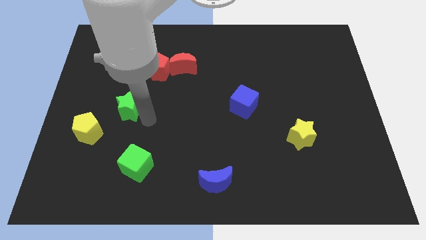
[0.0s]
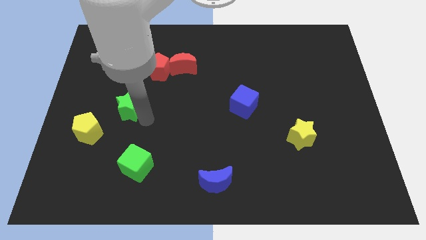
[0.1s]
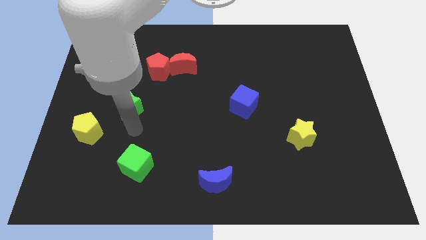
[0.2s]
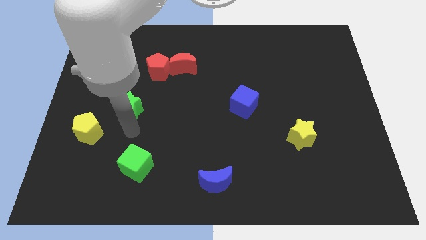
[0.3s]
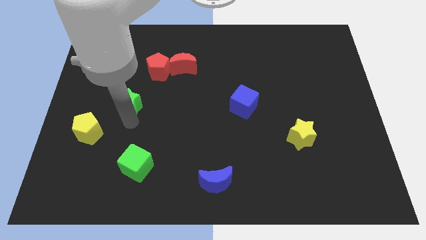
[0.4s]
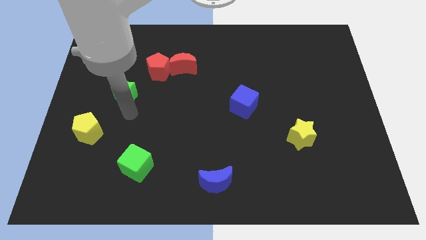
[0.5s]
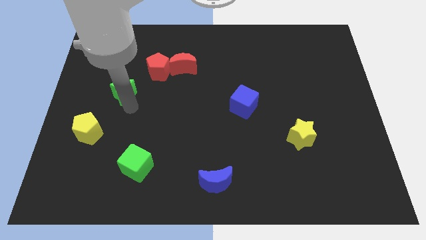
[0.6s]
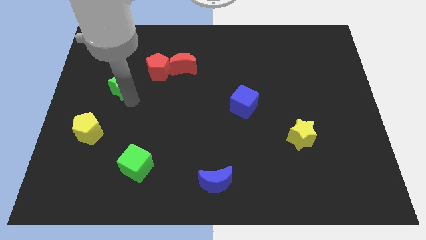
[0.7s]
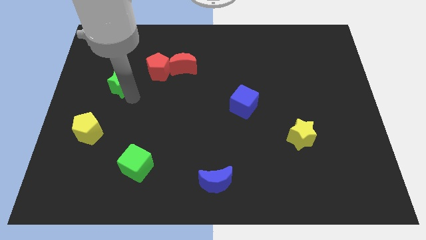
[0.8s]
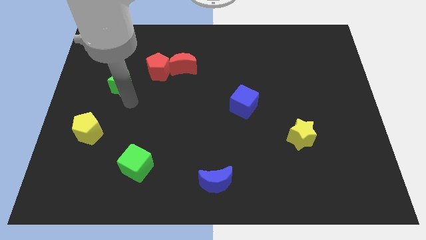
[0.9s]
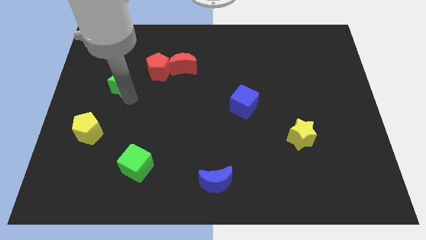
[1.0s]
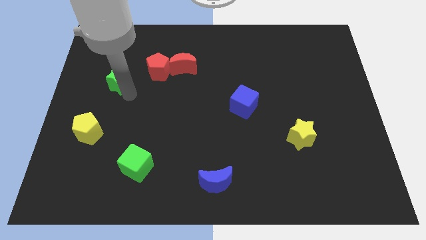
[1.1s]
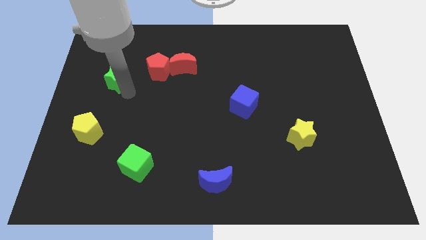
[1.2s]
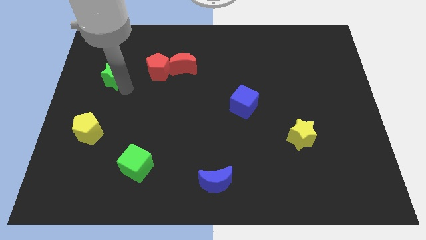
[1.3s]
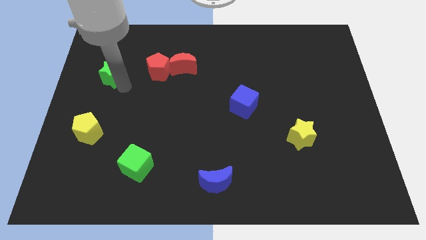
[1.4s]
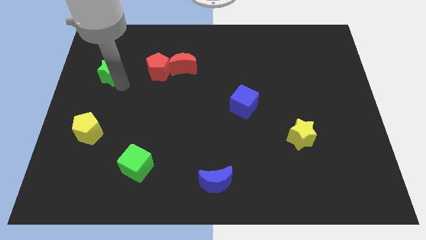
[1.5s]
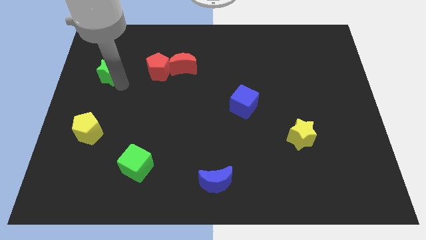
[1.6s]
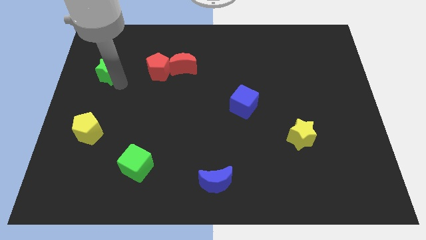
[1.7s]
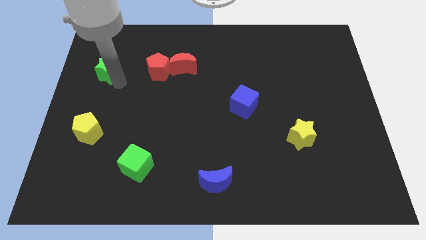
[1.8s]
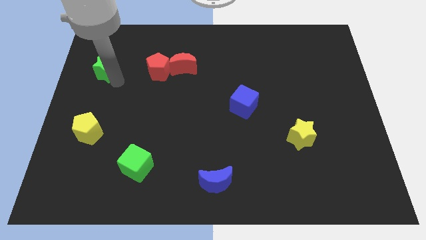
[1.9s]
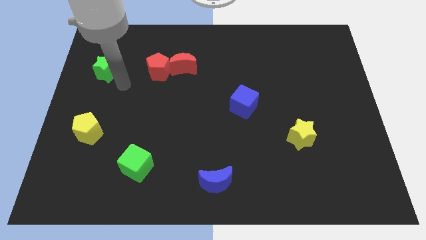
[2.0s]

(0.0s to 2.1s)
move the green star to the left side of the red pentagon

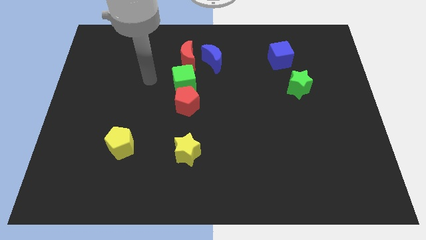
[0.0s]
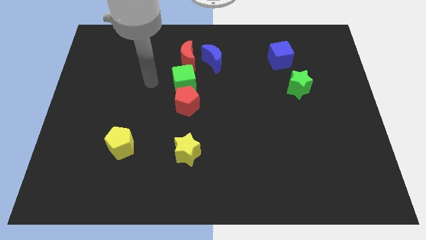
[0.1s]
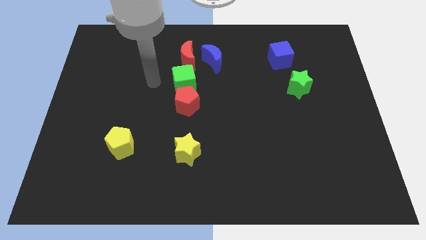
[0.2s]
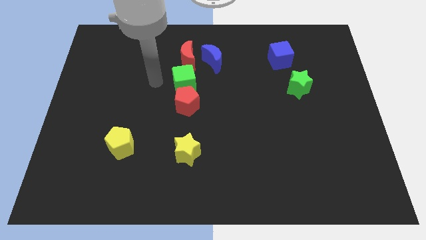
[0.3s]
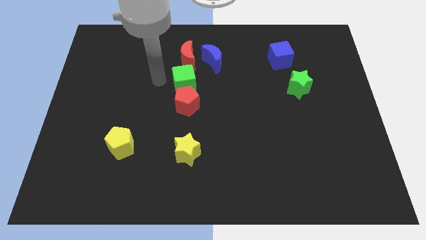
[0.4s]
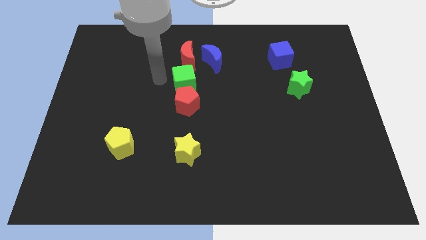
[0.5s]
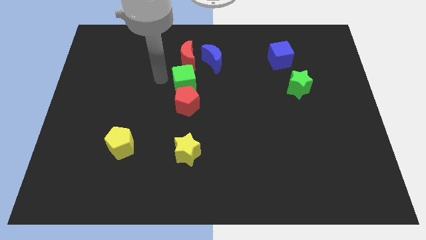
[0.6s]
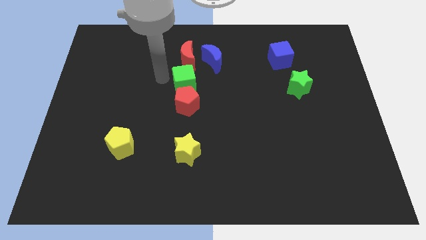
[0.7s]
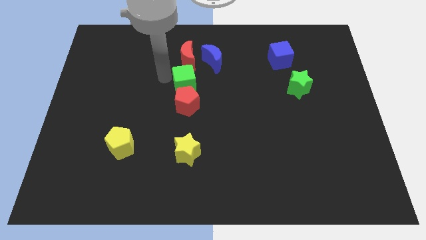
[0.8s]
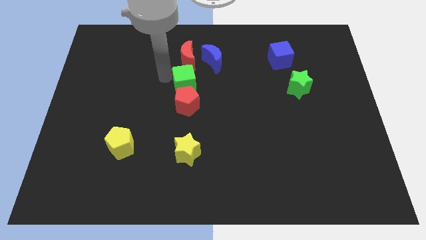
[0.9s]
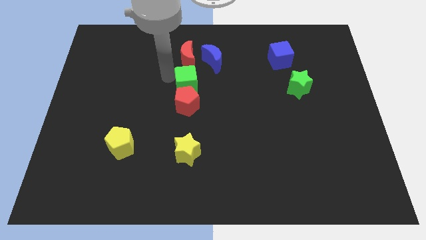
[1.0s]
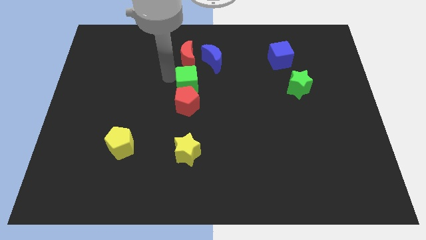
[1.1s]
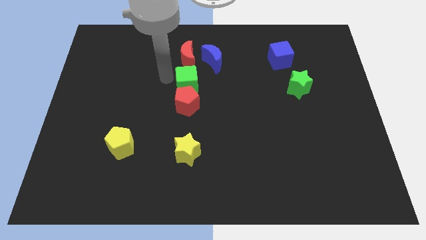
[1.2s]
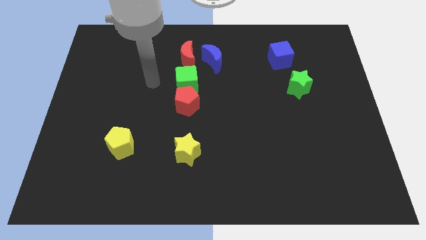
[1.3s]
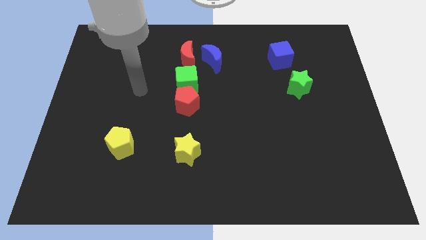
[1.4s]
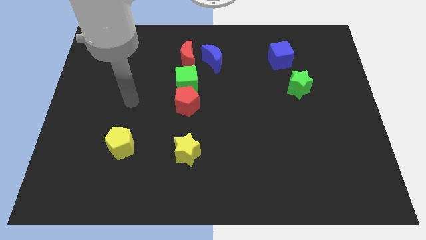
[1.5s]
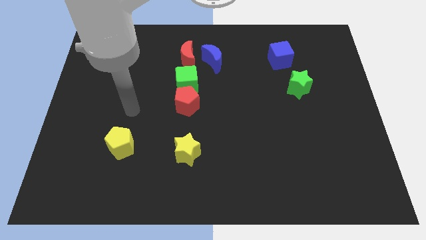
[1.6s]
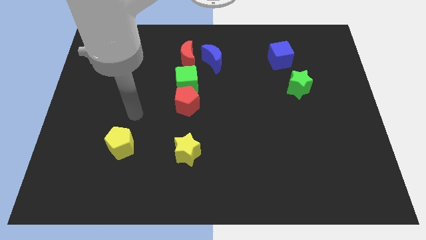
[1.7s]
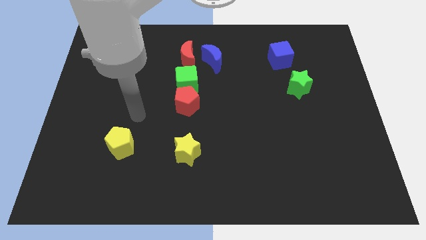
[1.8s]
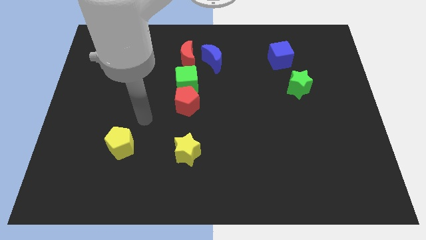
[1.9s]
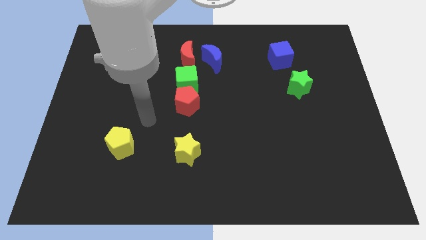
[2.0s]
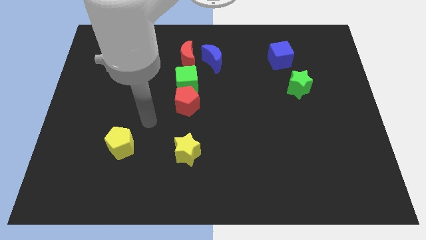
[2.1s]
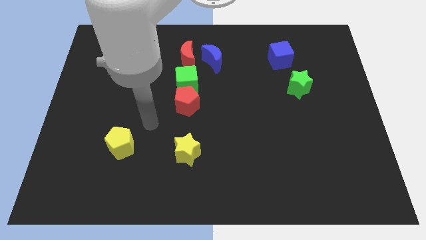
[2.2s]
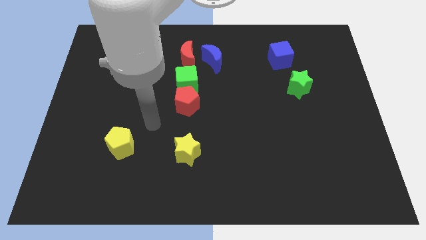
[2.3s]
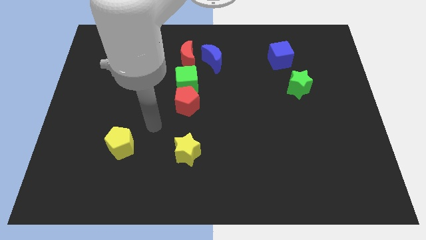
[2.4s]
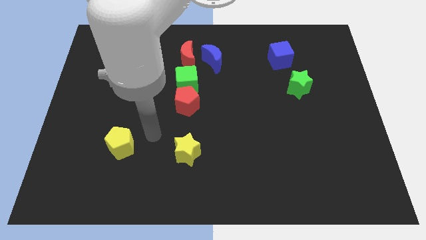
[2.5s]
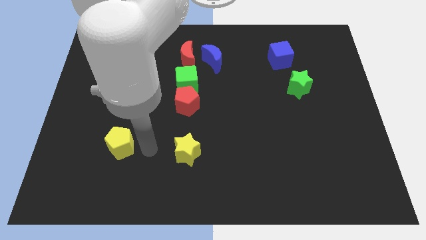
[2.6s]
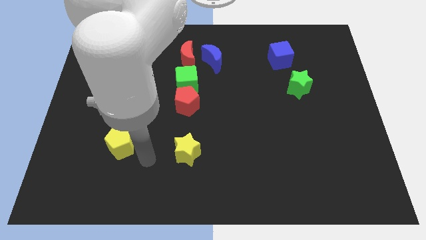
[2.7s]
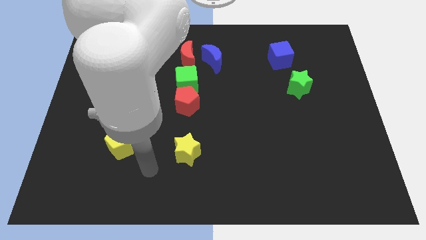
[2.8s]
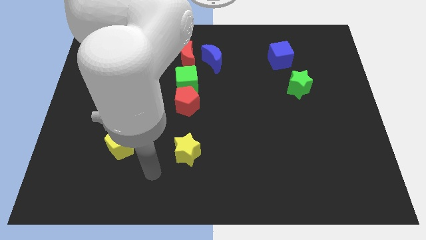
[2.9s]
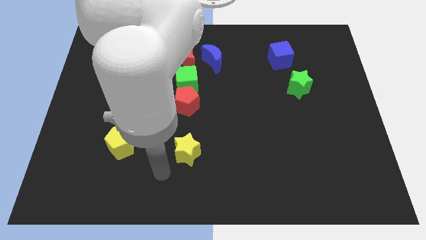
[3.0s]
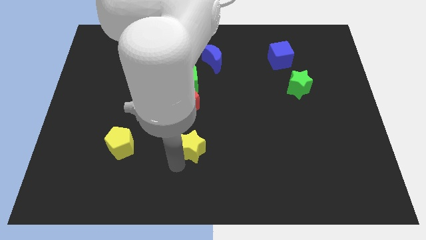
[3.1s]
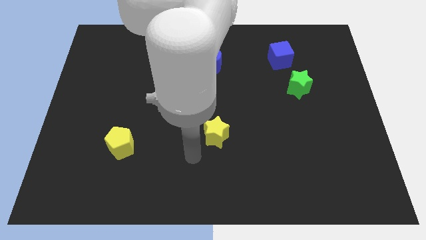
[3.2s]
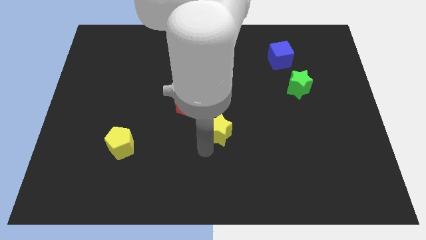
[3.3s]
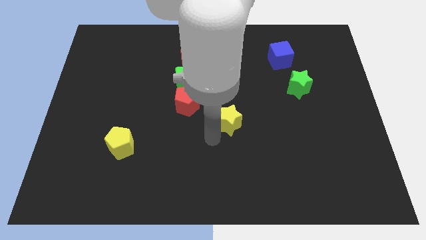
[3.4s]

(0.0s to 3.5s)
move the yellow star to the top right

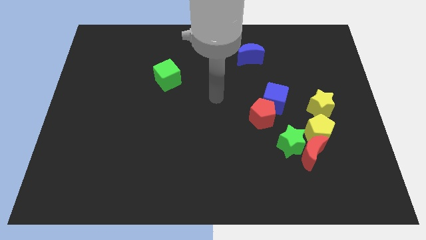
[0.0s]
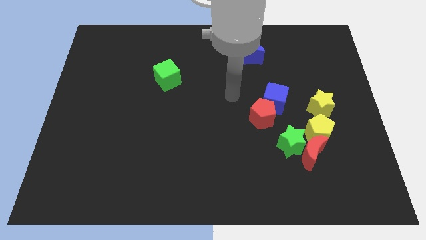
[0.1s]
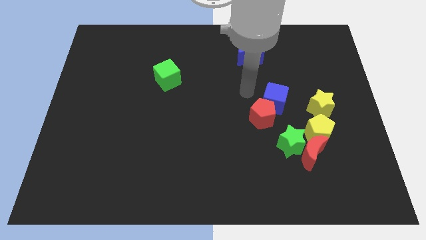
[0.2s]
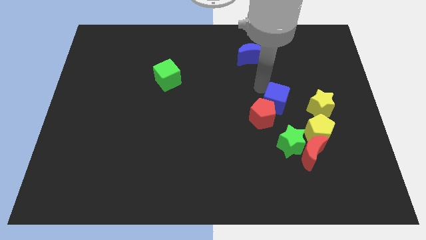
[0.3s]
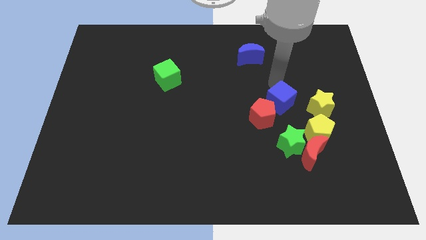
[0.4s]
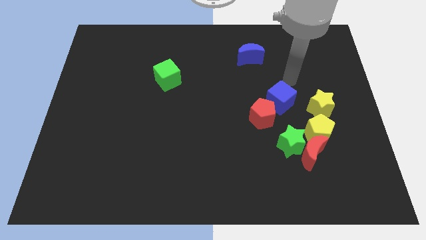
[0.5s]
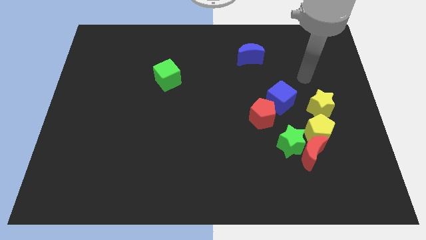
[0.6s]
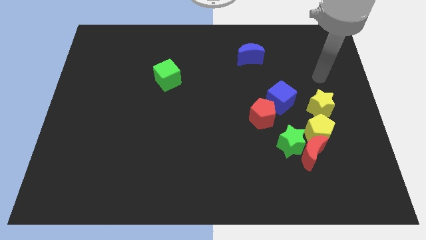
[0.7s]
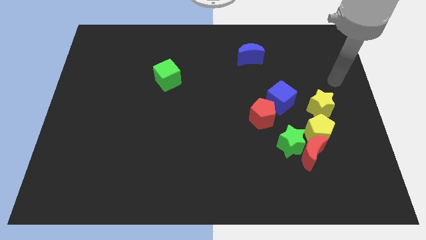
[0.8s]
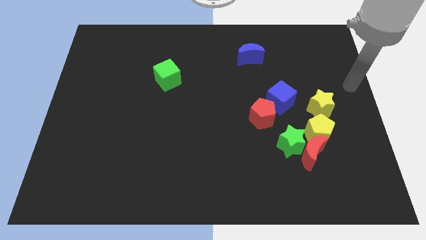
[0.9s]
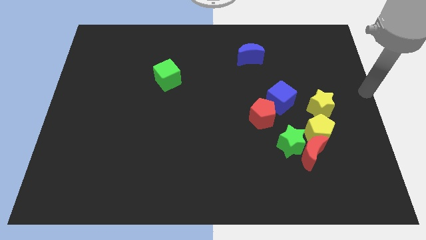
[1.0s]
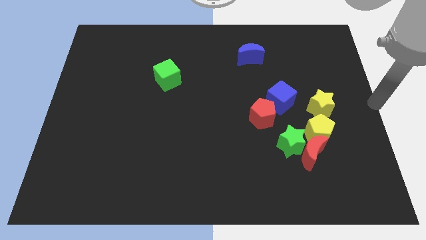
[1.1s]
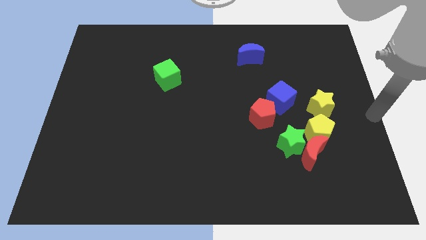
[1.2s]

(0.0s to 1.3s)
move the pointer at the right side of the board

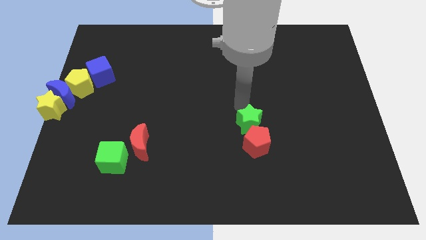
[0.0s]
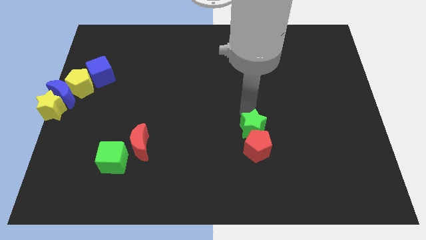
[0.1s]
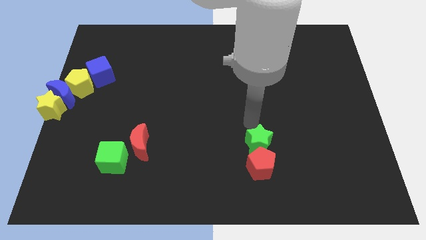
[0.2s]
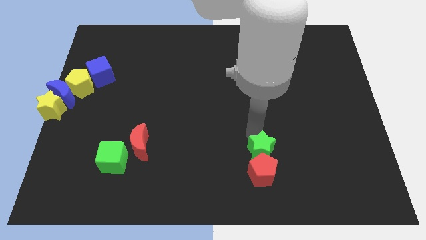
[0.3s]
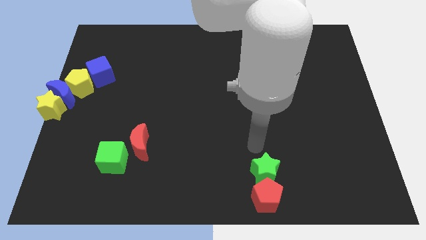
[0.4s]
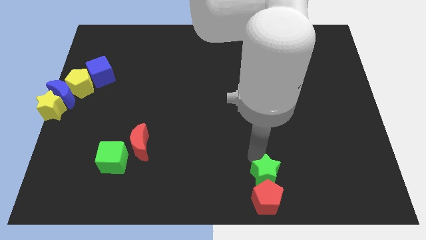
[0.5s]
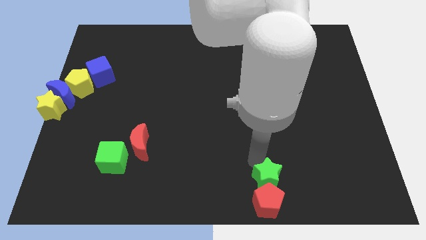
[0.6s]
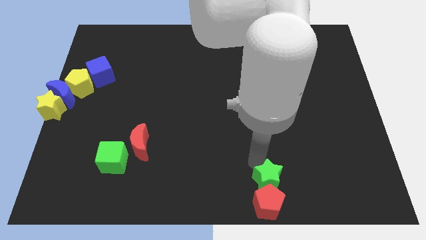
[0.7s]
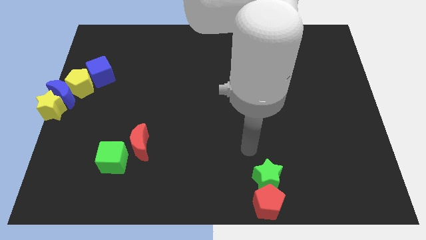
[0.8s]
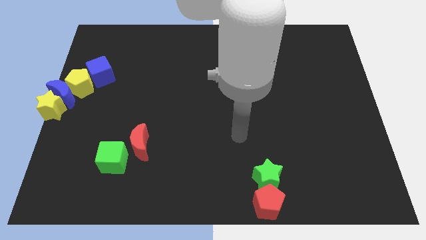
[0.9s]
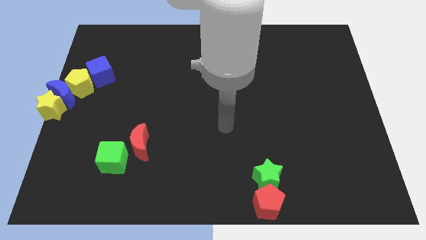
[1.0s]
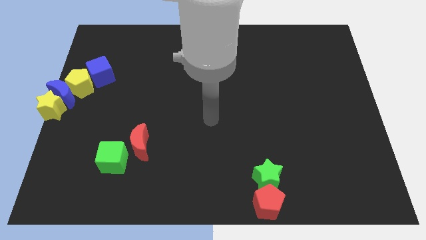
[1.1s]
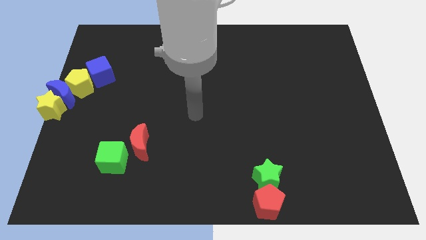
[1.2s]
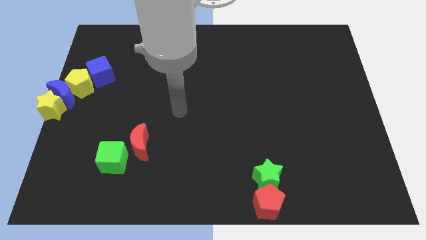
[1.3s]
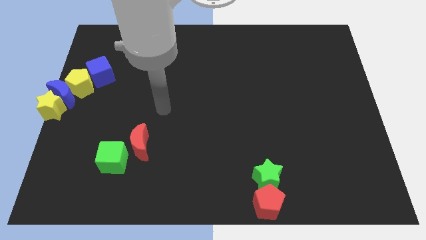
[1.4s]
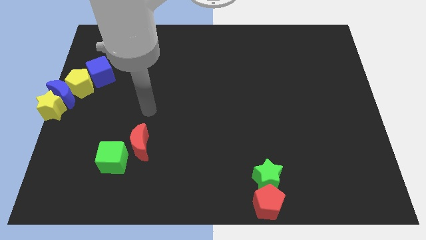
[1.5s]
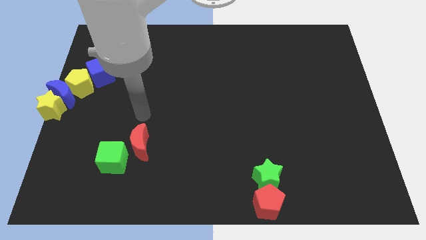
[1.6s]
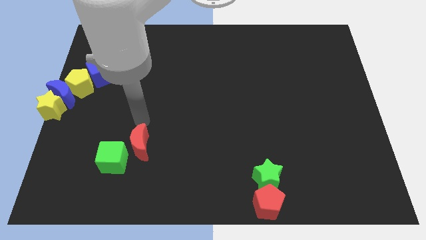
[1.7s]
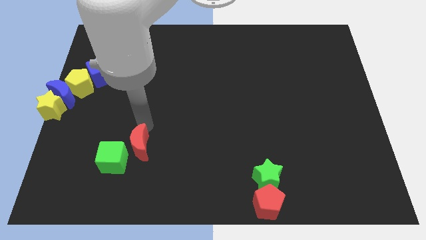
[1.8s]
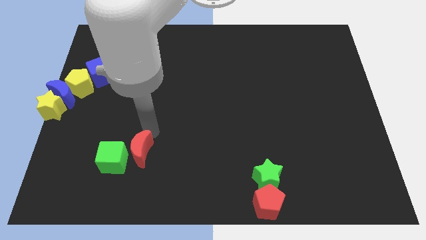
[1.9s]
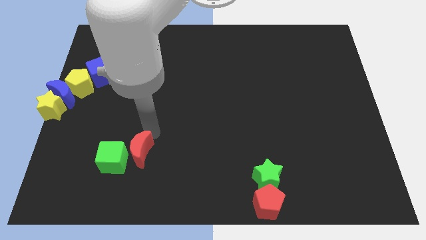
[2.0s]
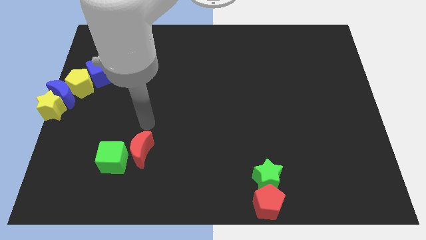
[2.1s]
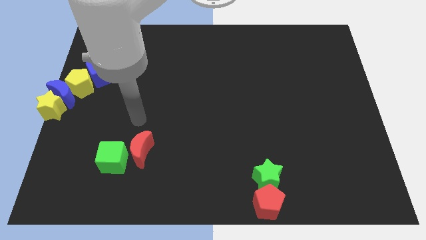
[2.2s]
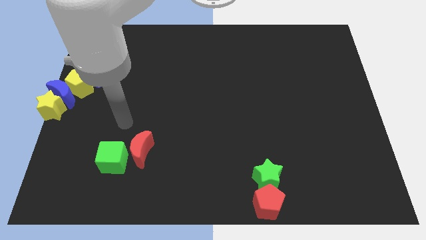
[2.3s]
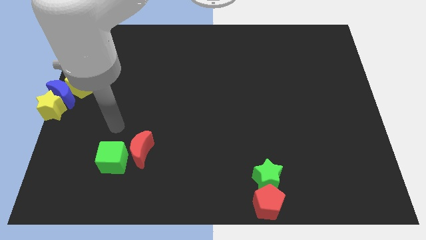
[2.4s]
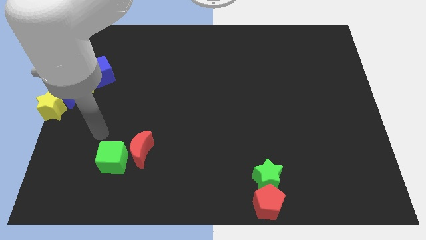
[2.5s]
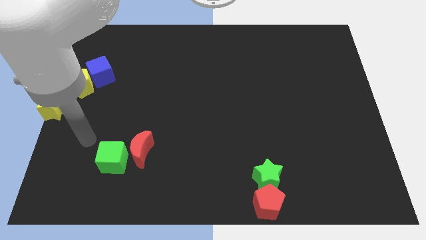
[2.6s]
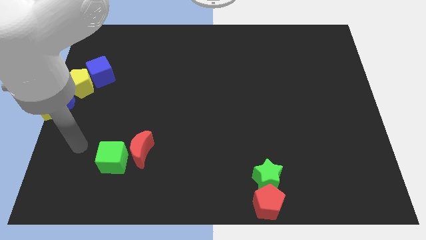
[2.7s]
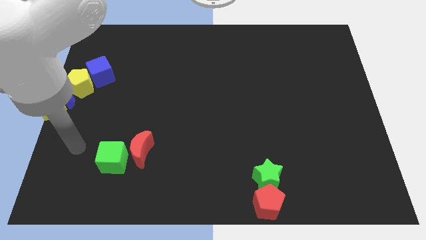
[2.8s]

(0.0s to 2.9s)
move the red pentagon and green star to the bottom center
